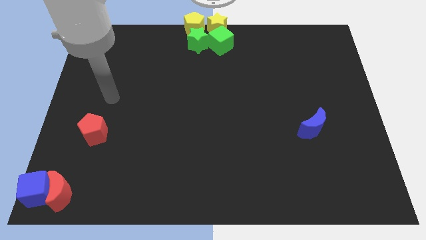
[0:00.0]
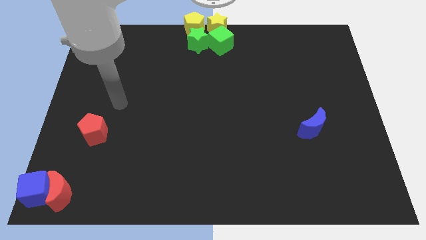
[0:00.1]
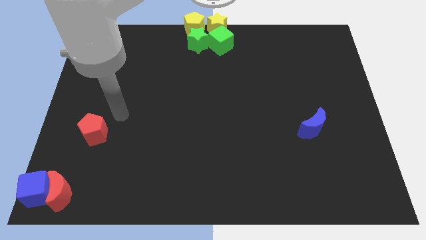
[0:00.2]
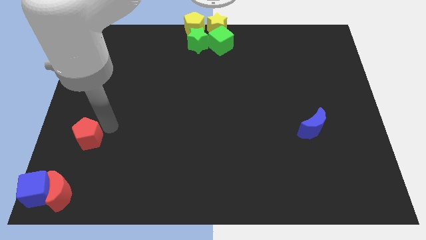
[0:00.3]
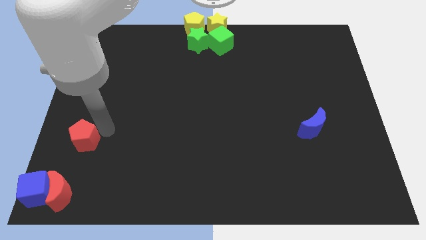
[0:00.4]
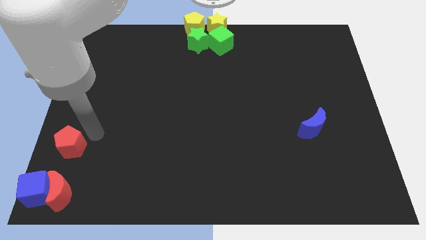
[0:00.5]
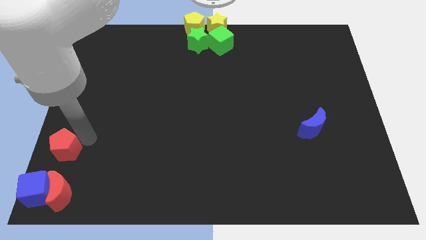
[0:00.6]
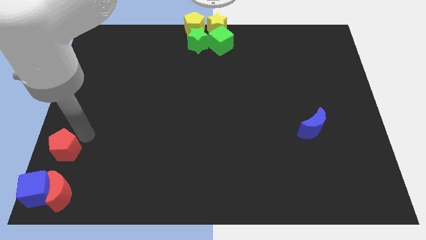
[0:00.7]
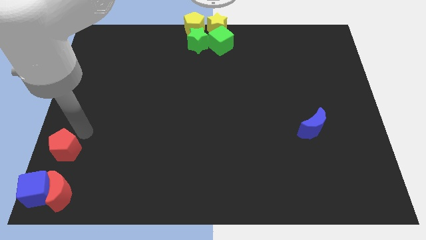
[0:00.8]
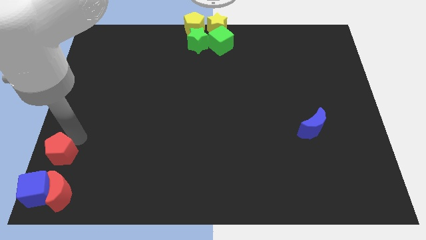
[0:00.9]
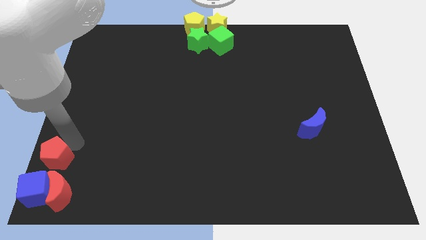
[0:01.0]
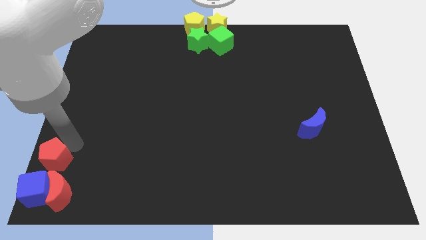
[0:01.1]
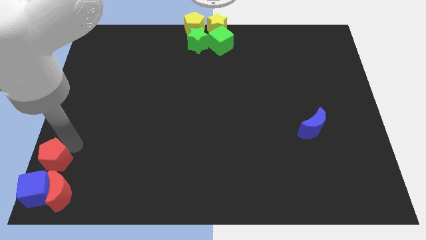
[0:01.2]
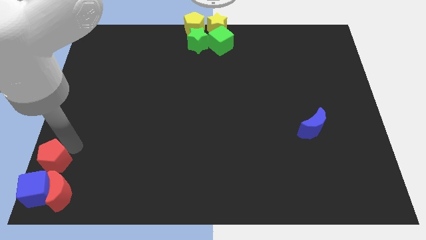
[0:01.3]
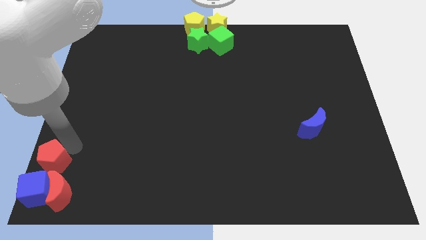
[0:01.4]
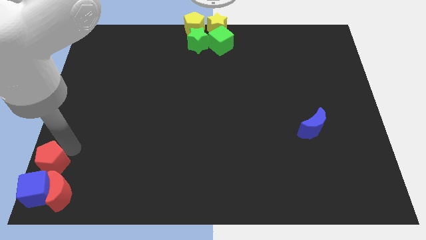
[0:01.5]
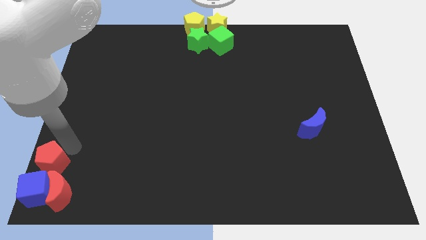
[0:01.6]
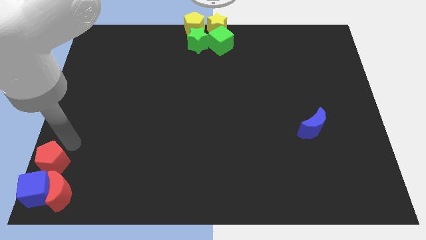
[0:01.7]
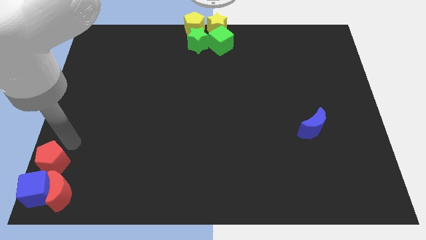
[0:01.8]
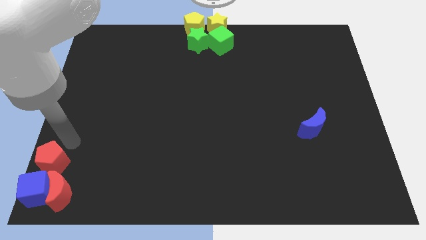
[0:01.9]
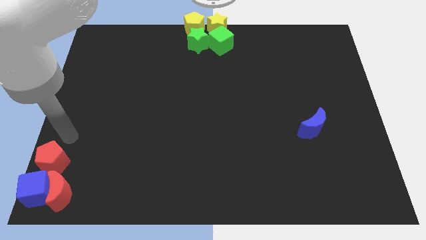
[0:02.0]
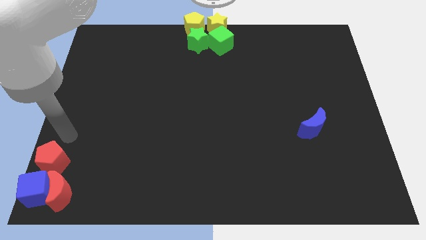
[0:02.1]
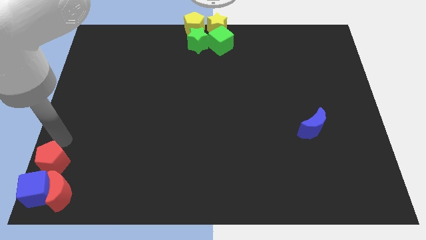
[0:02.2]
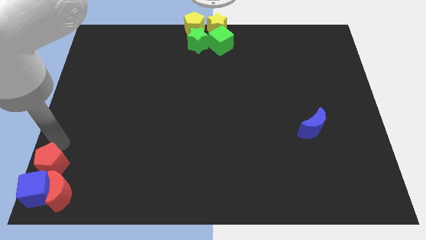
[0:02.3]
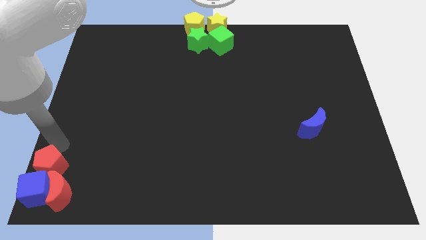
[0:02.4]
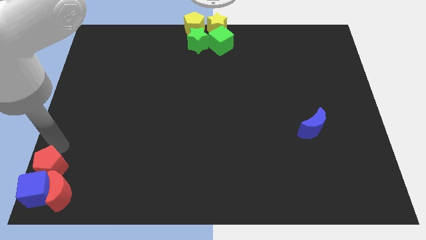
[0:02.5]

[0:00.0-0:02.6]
place the red pentagon to the top of blue cube

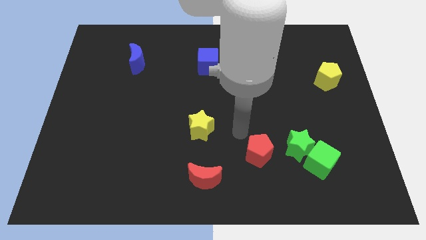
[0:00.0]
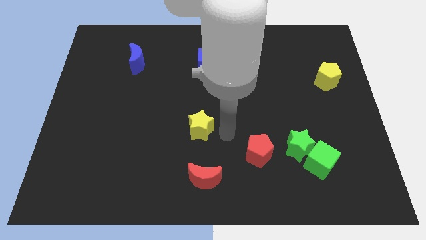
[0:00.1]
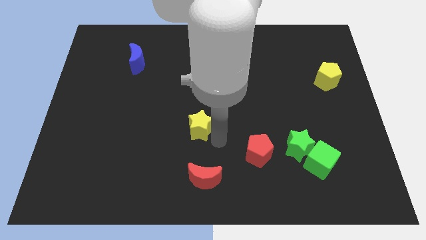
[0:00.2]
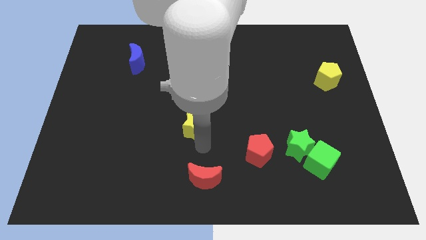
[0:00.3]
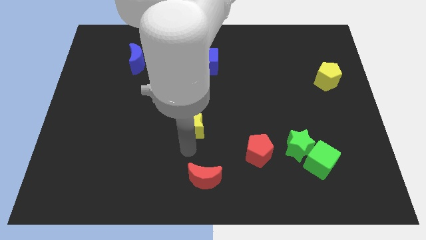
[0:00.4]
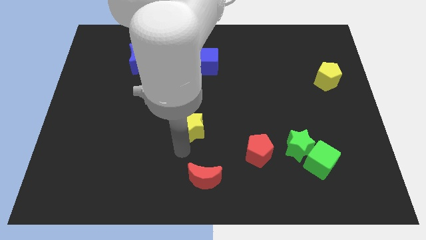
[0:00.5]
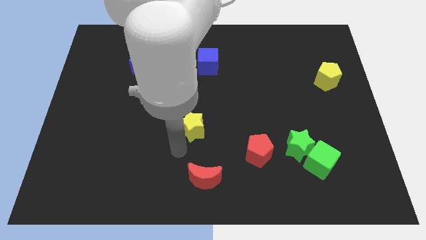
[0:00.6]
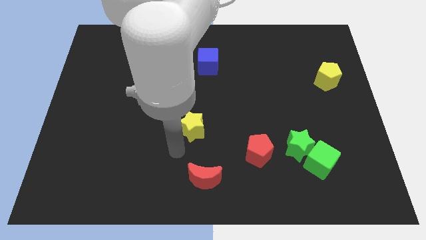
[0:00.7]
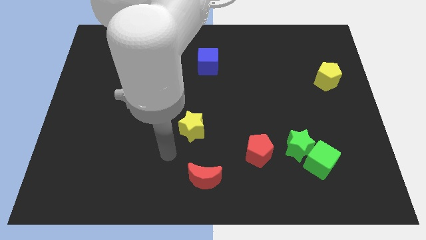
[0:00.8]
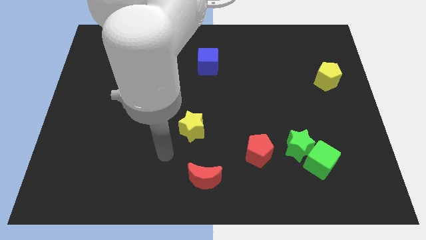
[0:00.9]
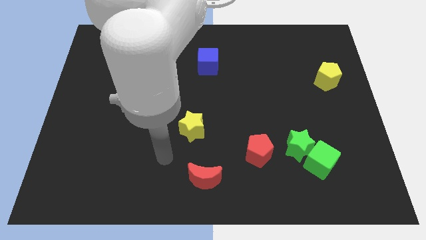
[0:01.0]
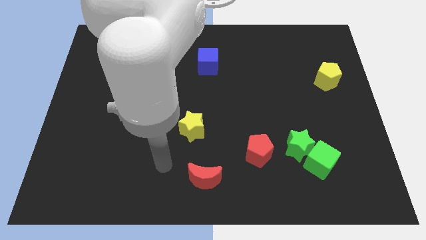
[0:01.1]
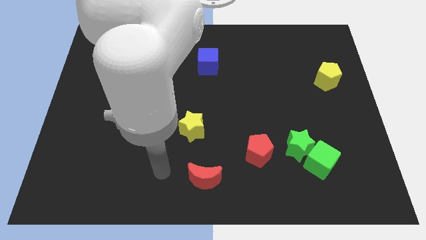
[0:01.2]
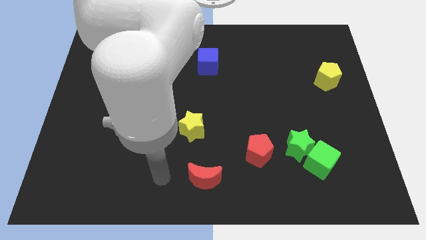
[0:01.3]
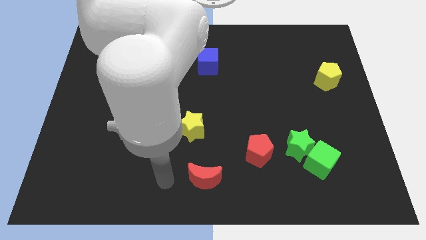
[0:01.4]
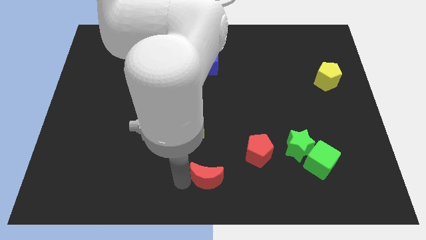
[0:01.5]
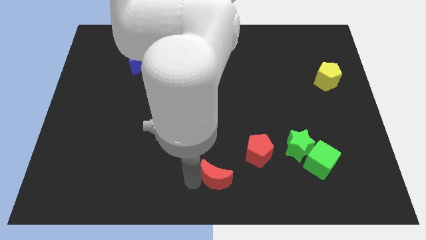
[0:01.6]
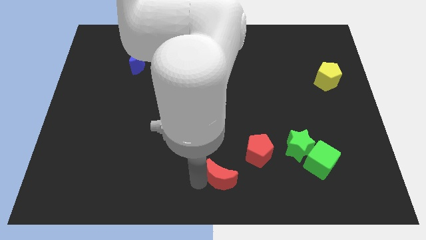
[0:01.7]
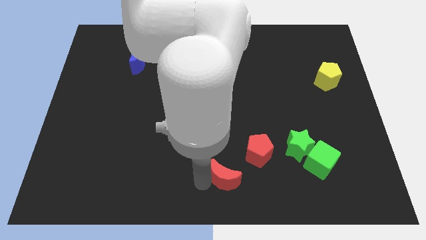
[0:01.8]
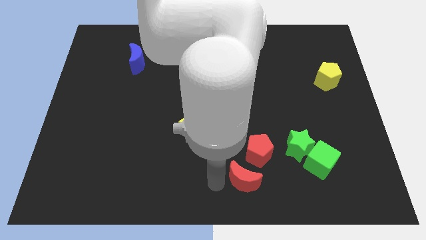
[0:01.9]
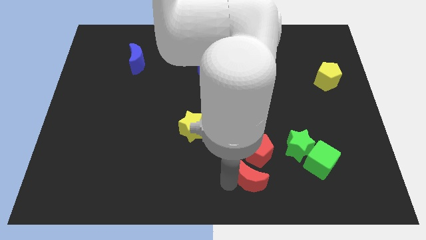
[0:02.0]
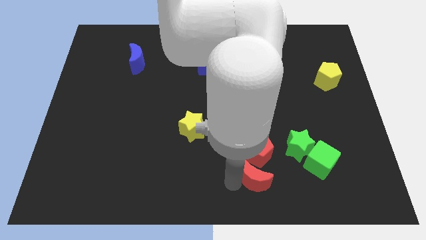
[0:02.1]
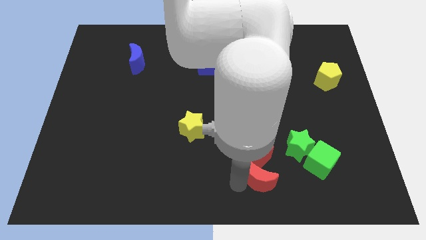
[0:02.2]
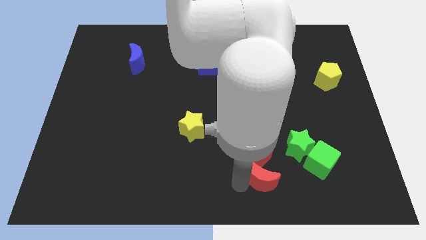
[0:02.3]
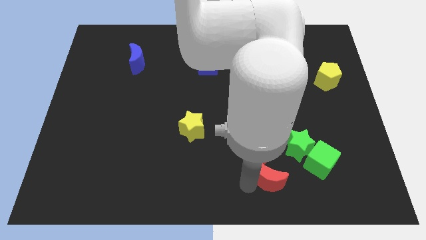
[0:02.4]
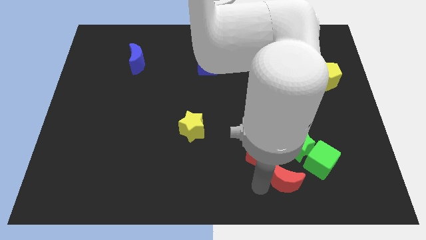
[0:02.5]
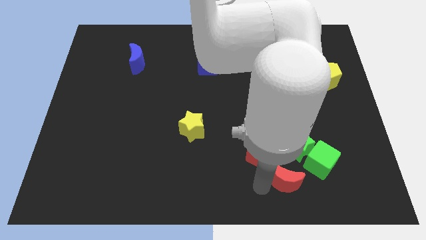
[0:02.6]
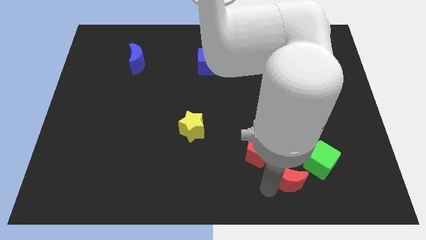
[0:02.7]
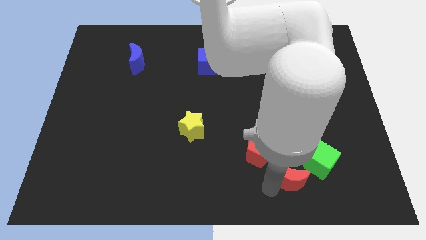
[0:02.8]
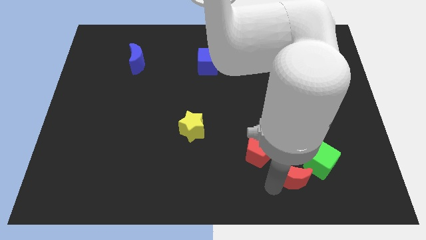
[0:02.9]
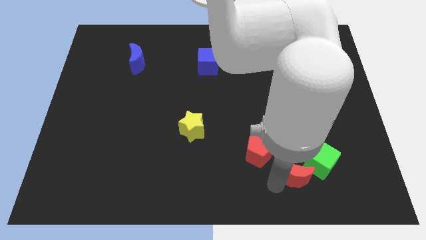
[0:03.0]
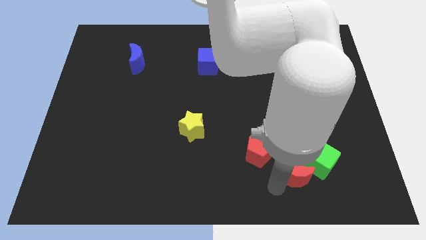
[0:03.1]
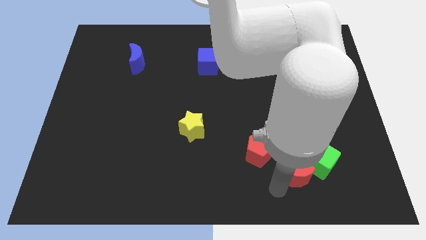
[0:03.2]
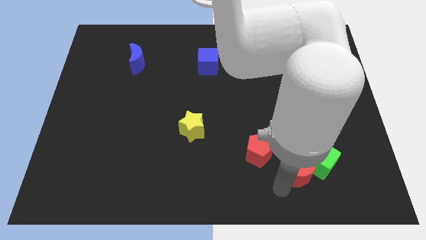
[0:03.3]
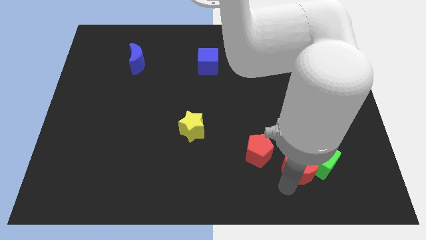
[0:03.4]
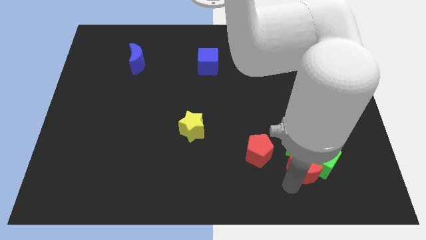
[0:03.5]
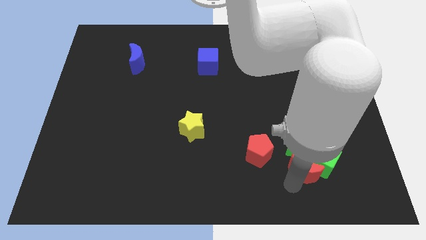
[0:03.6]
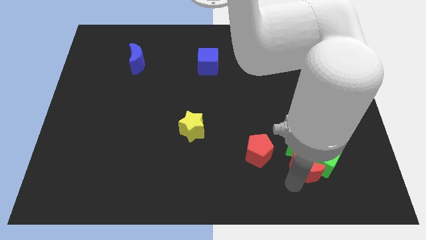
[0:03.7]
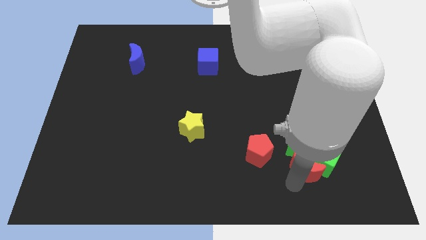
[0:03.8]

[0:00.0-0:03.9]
push the red moon into the green blocks

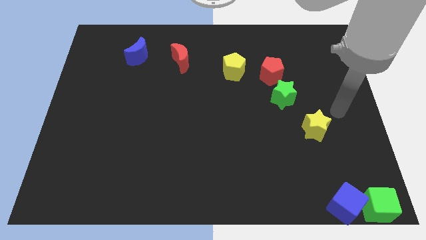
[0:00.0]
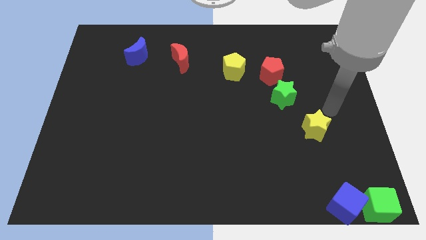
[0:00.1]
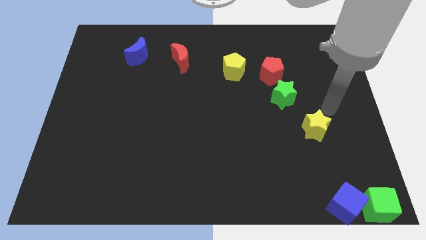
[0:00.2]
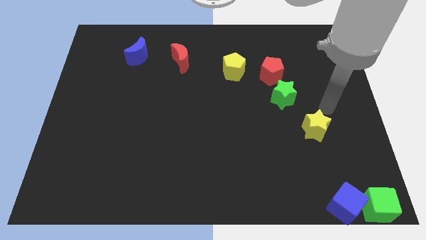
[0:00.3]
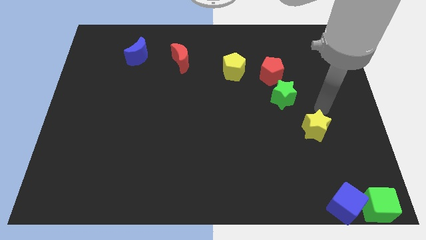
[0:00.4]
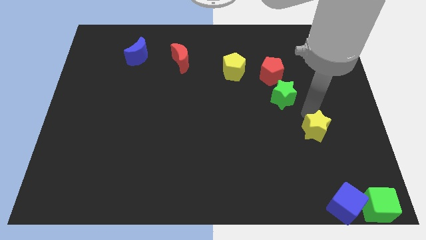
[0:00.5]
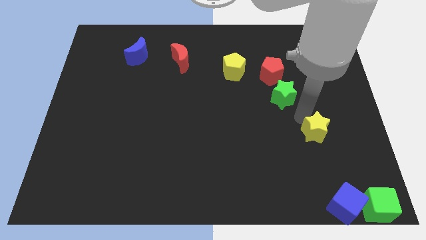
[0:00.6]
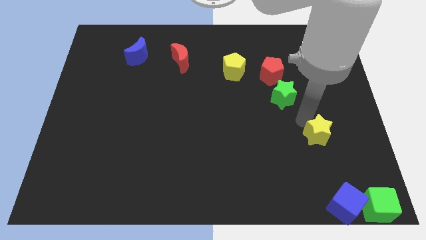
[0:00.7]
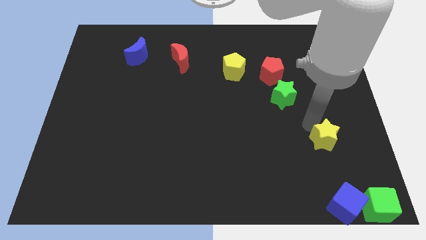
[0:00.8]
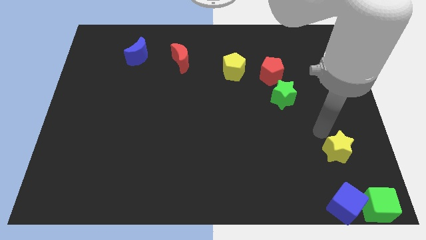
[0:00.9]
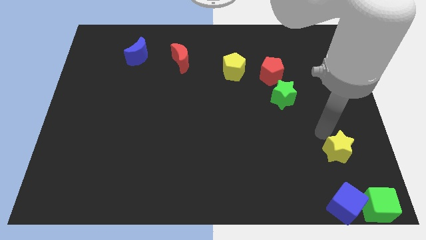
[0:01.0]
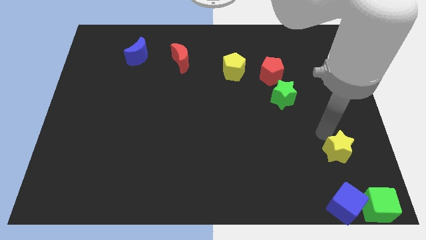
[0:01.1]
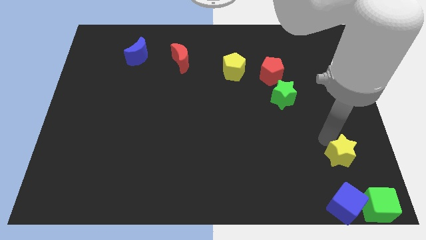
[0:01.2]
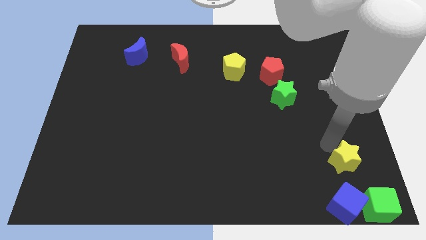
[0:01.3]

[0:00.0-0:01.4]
push the yellow star vertically above the blue cube

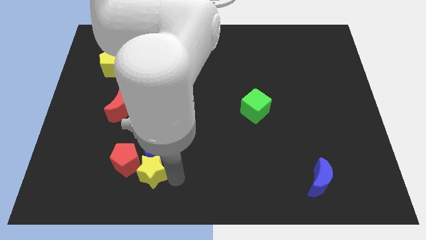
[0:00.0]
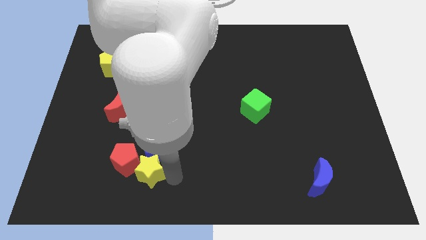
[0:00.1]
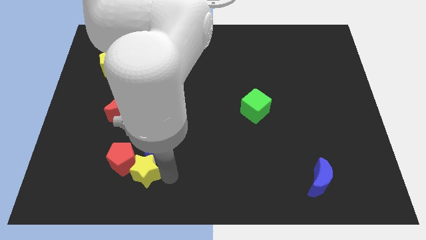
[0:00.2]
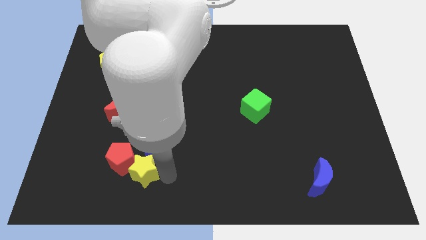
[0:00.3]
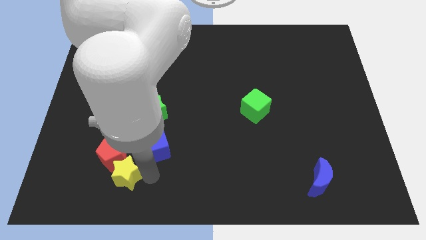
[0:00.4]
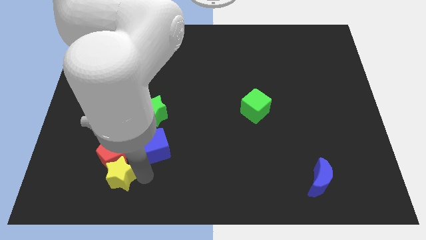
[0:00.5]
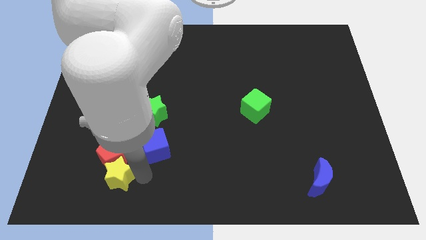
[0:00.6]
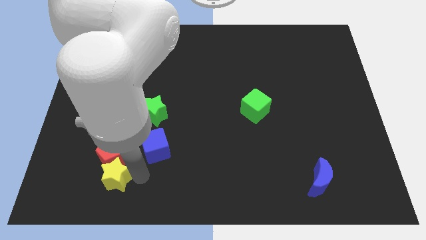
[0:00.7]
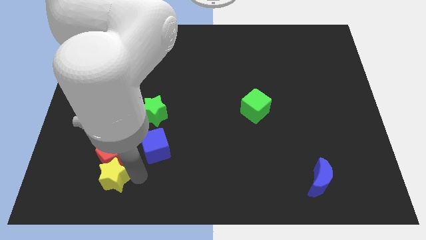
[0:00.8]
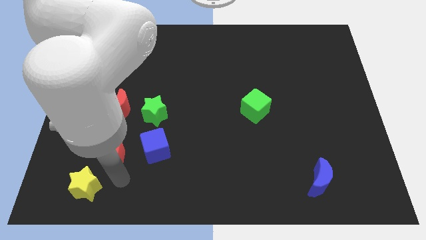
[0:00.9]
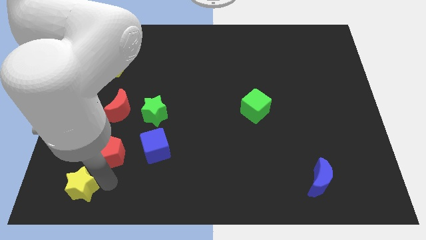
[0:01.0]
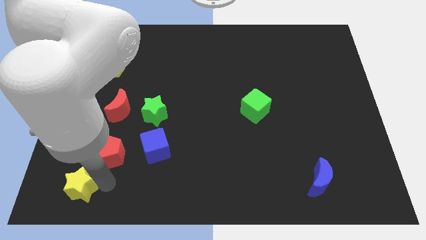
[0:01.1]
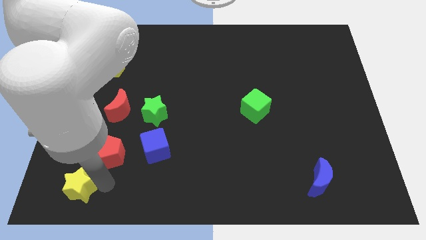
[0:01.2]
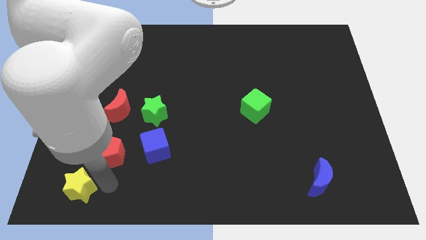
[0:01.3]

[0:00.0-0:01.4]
move the yellow star to the bottom left
